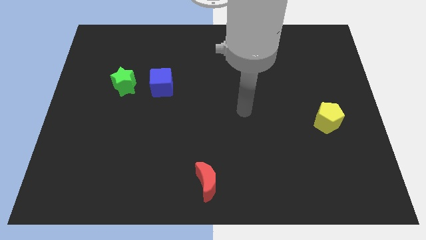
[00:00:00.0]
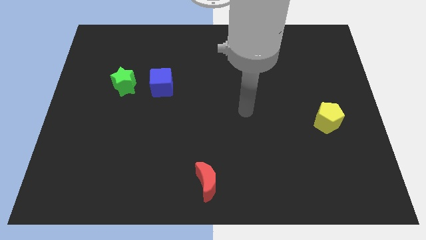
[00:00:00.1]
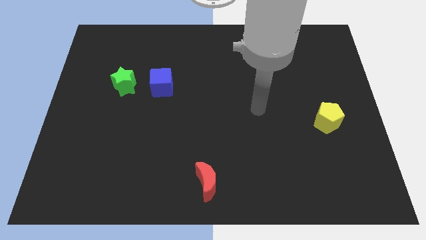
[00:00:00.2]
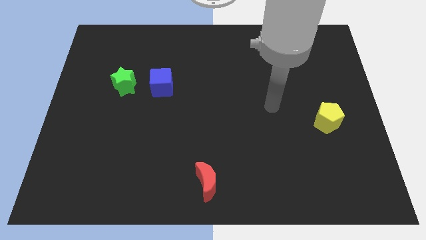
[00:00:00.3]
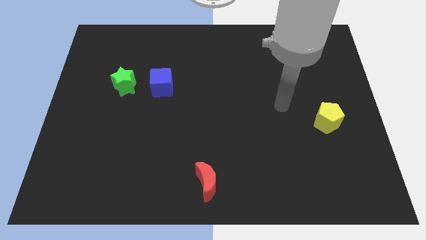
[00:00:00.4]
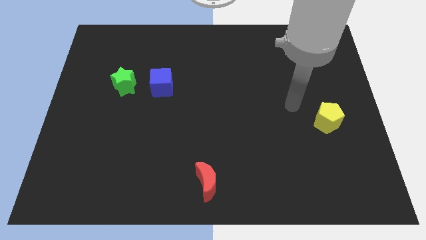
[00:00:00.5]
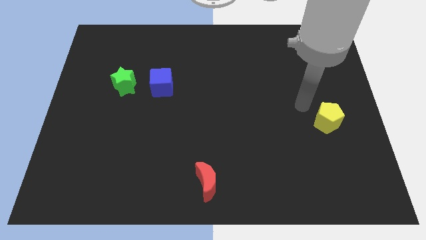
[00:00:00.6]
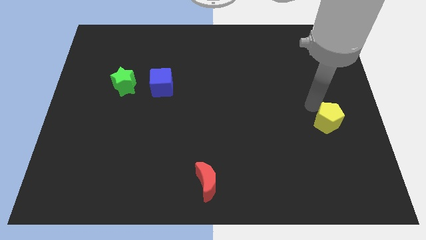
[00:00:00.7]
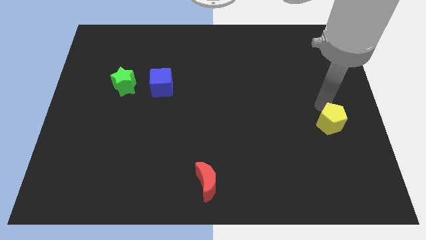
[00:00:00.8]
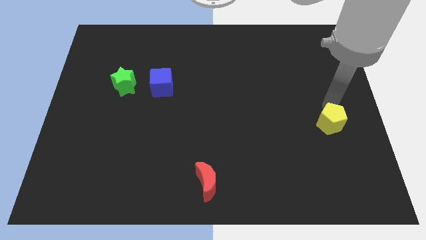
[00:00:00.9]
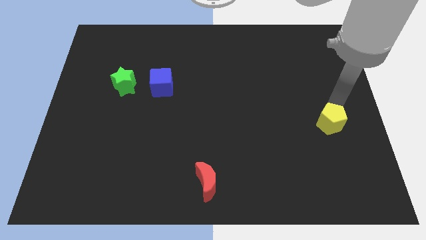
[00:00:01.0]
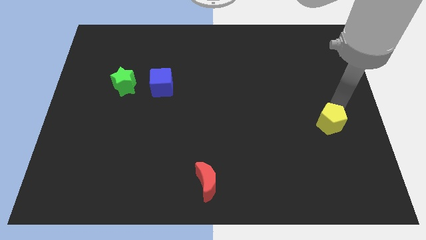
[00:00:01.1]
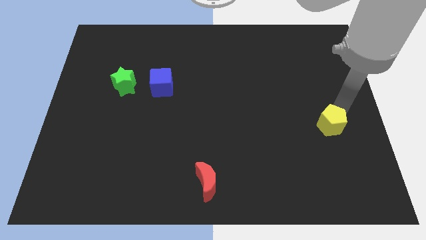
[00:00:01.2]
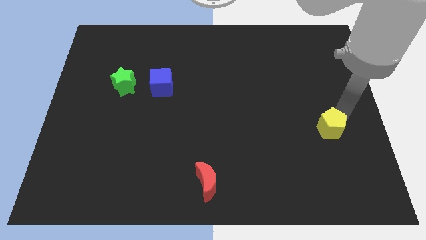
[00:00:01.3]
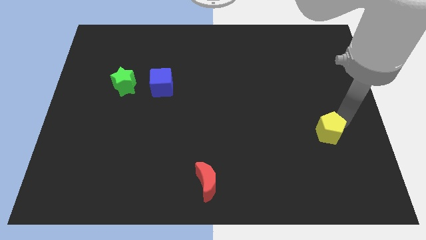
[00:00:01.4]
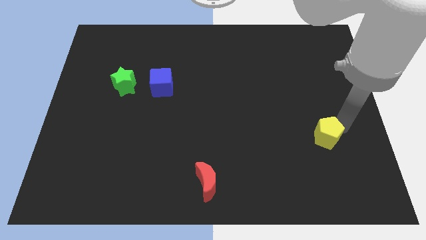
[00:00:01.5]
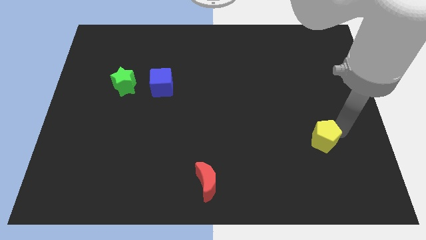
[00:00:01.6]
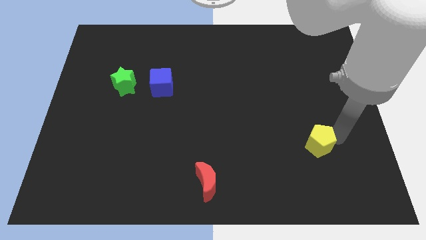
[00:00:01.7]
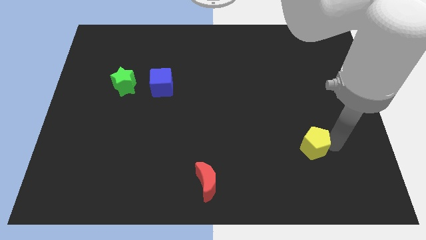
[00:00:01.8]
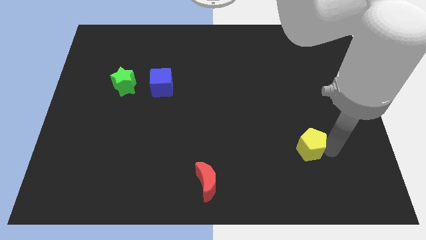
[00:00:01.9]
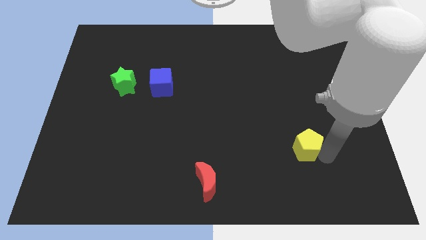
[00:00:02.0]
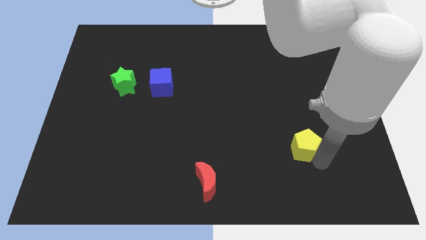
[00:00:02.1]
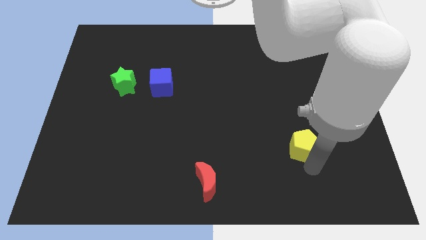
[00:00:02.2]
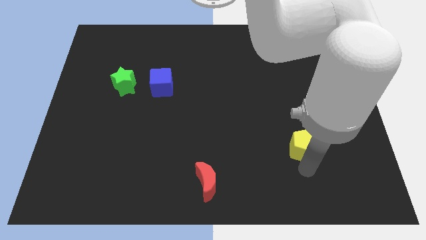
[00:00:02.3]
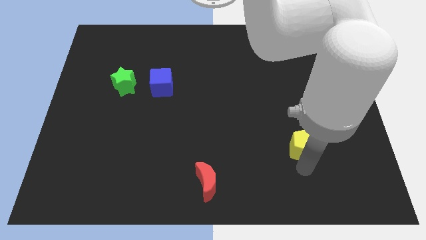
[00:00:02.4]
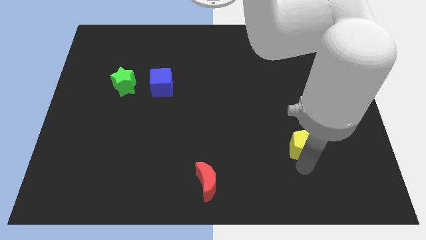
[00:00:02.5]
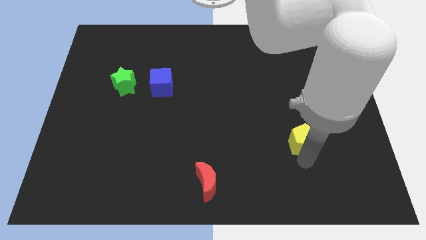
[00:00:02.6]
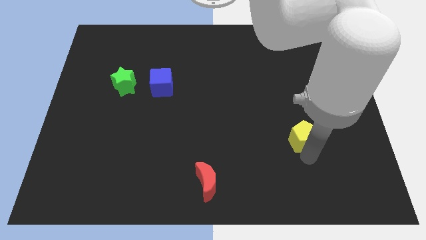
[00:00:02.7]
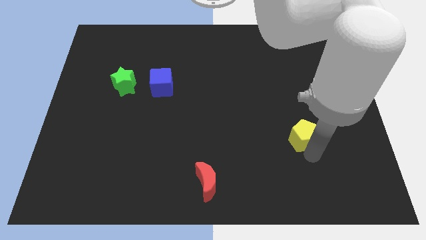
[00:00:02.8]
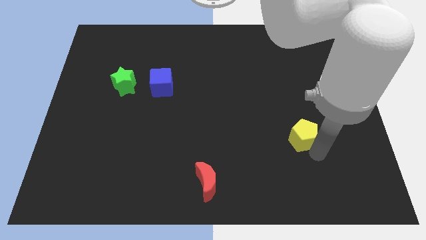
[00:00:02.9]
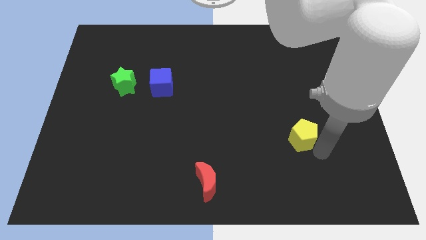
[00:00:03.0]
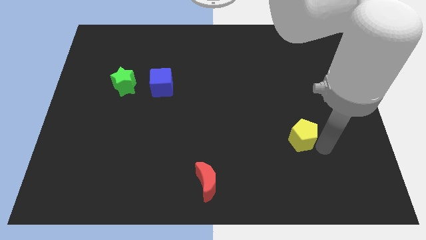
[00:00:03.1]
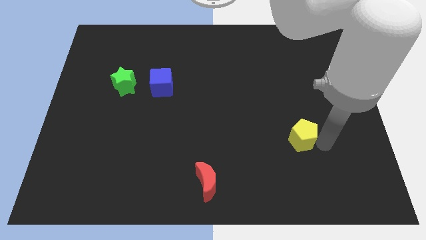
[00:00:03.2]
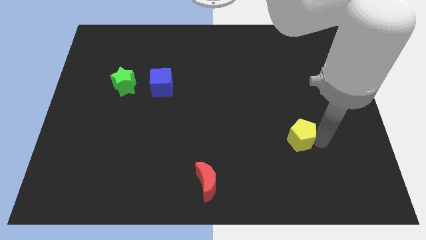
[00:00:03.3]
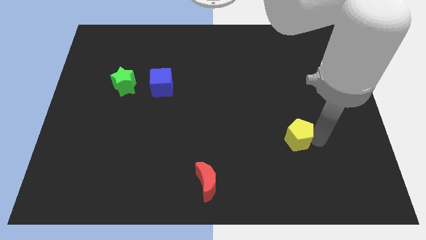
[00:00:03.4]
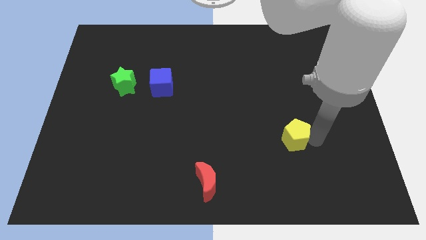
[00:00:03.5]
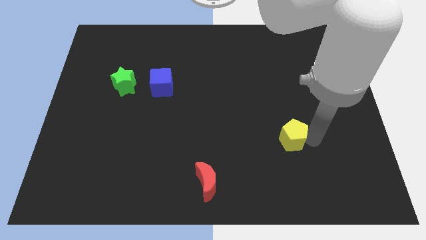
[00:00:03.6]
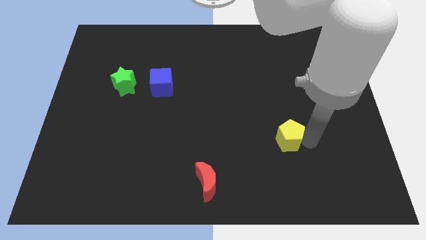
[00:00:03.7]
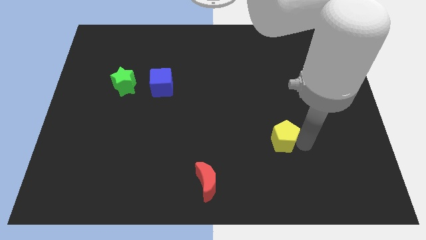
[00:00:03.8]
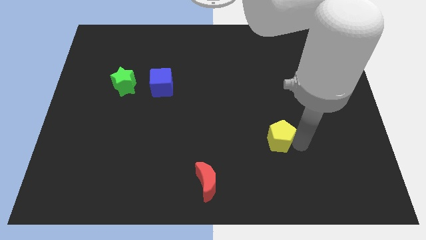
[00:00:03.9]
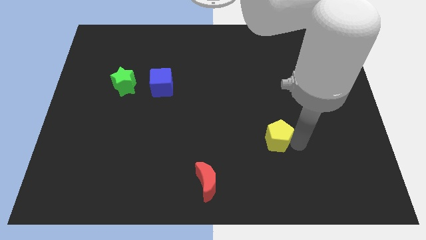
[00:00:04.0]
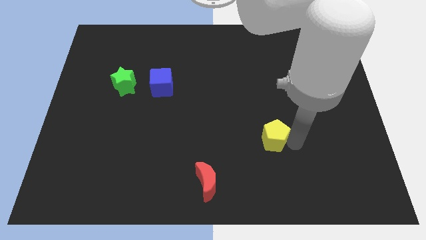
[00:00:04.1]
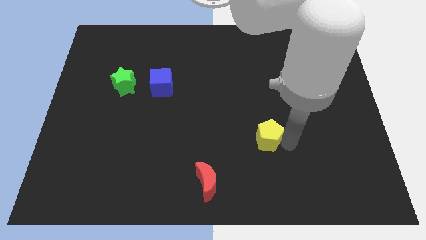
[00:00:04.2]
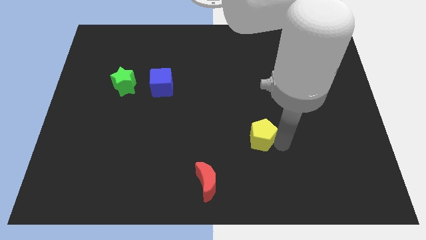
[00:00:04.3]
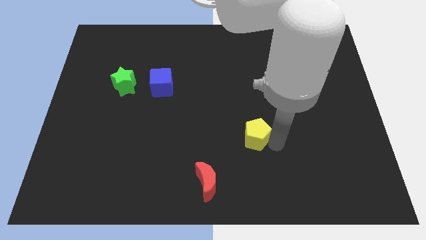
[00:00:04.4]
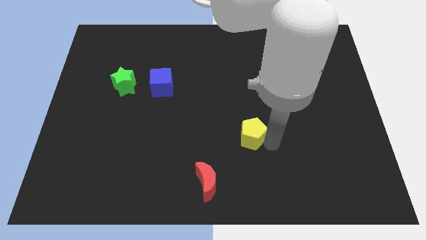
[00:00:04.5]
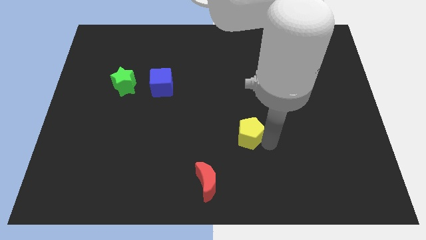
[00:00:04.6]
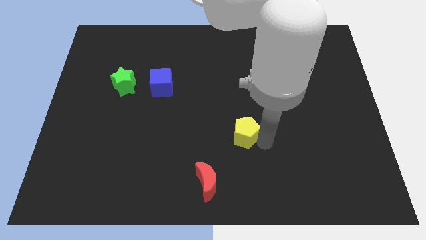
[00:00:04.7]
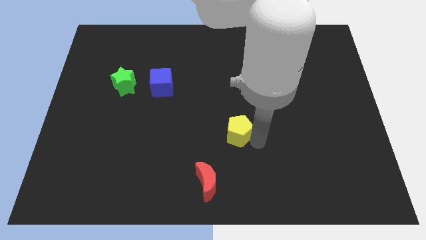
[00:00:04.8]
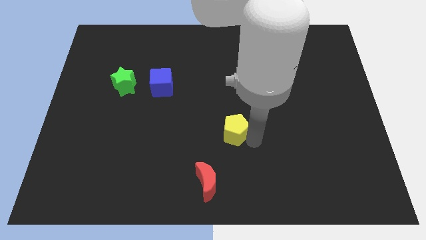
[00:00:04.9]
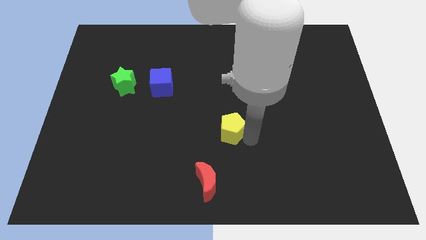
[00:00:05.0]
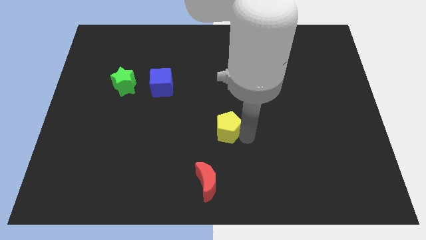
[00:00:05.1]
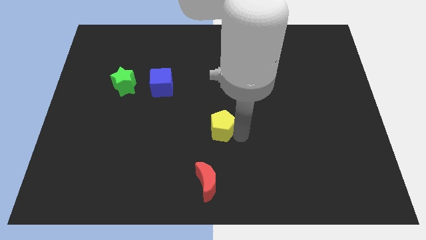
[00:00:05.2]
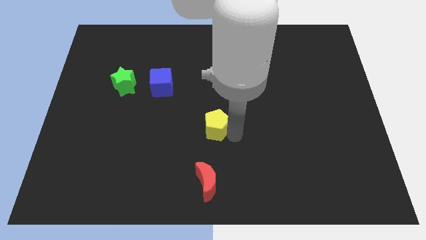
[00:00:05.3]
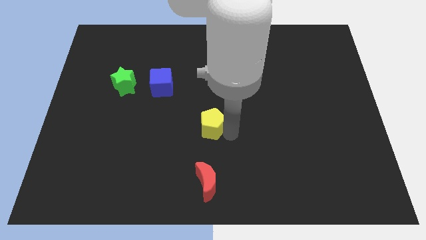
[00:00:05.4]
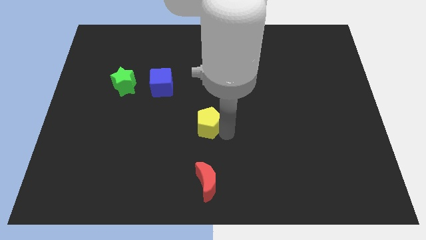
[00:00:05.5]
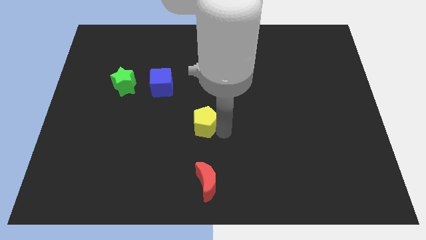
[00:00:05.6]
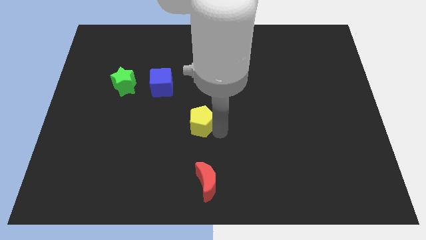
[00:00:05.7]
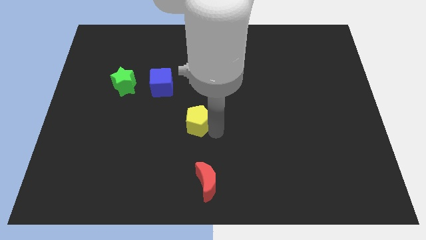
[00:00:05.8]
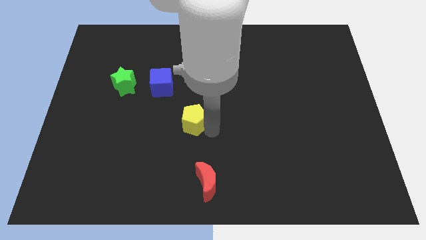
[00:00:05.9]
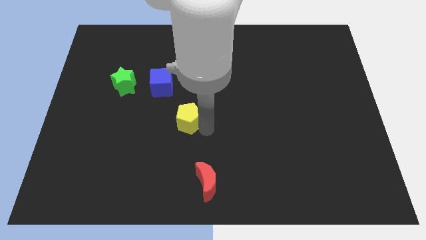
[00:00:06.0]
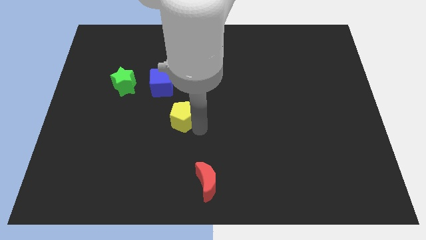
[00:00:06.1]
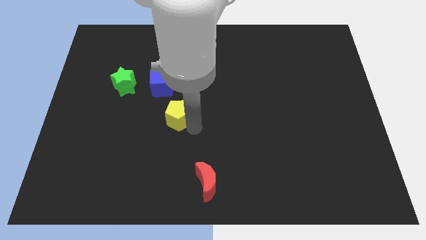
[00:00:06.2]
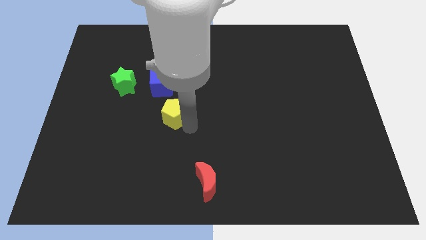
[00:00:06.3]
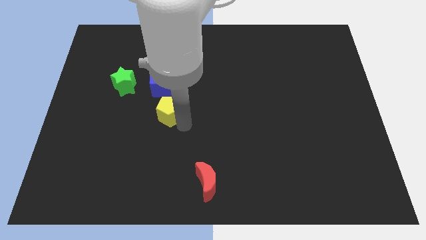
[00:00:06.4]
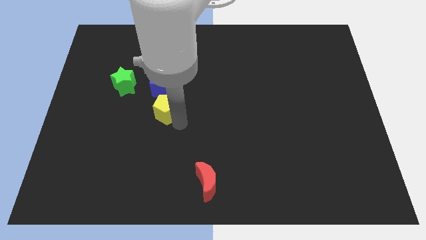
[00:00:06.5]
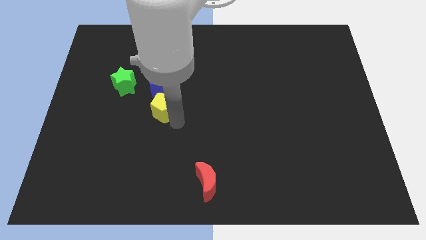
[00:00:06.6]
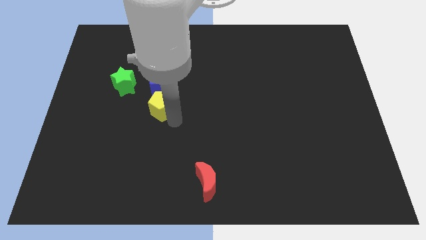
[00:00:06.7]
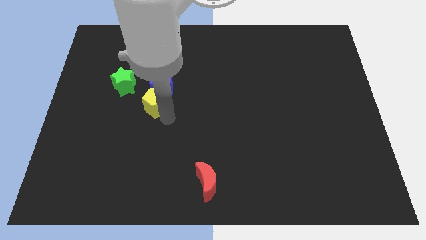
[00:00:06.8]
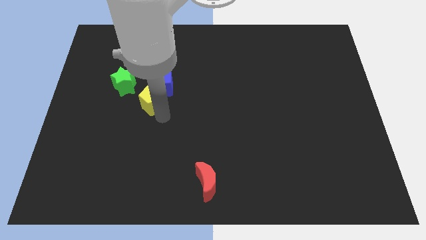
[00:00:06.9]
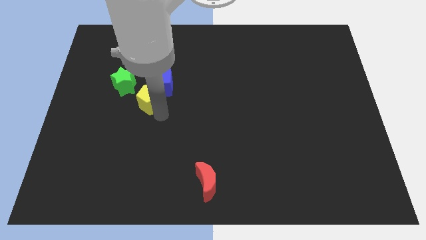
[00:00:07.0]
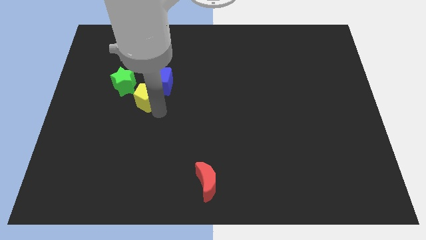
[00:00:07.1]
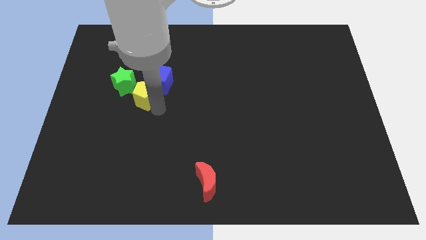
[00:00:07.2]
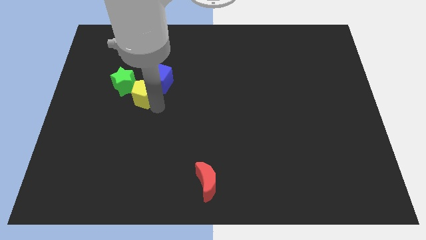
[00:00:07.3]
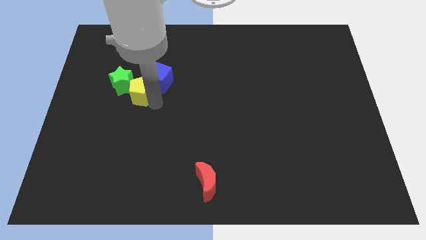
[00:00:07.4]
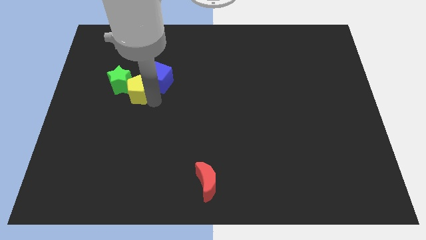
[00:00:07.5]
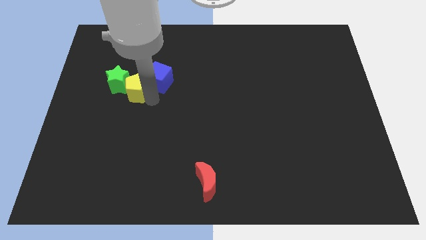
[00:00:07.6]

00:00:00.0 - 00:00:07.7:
put the yellow pentagon next to the green star

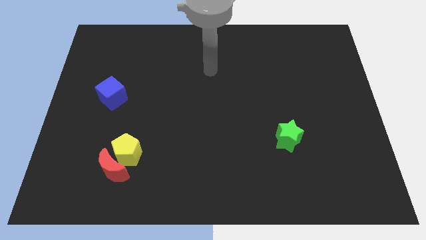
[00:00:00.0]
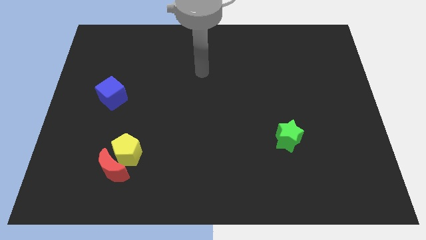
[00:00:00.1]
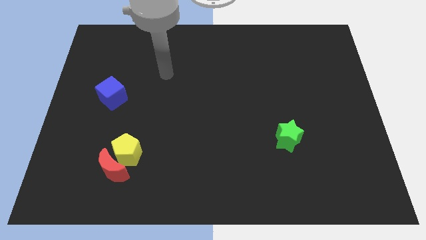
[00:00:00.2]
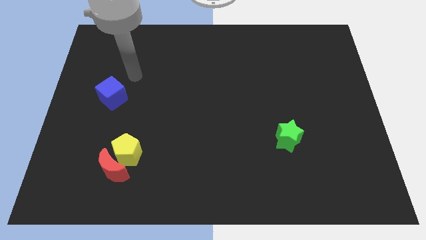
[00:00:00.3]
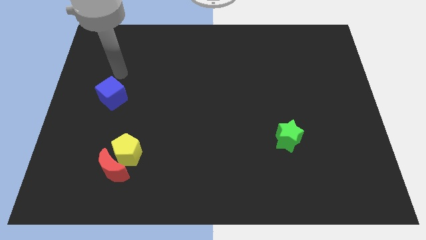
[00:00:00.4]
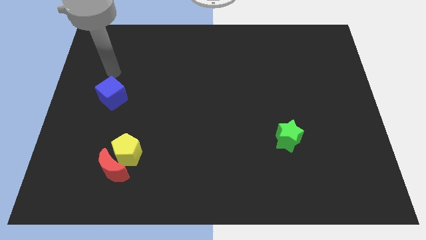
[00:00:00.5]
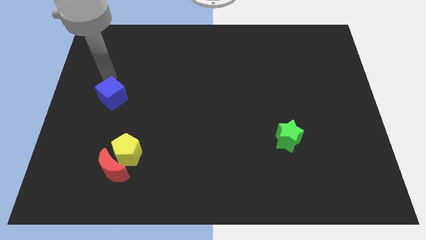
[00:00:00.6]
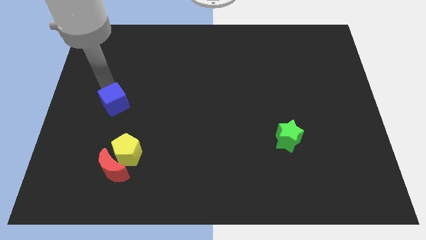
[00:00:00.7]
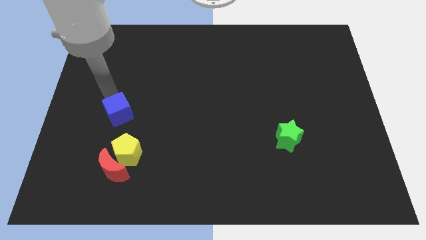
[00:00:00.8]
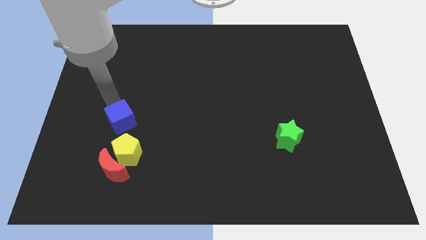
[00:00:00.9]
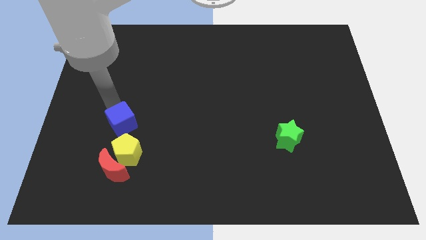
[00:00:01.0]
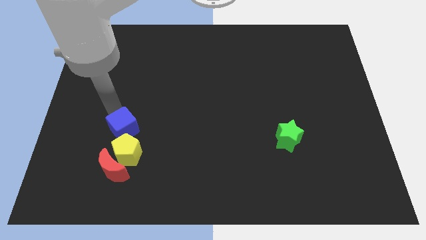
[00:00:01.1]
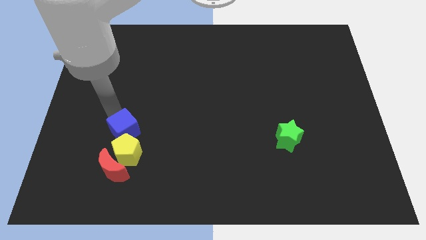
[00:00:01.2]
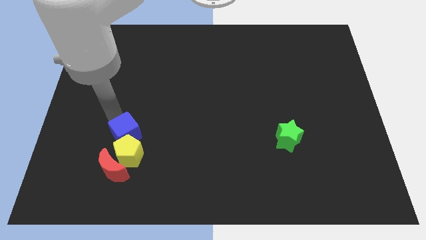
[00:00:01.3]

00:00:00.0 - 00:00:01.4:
put the cube to the yellow block
